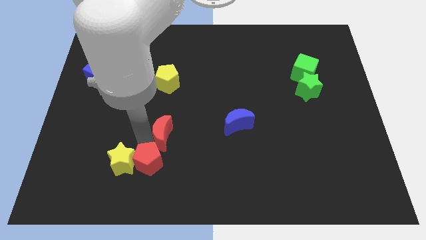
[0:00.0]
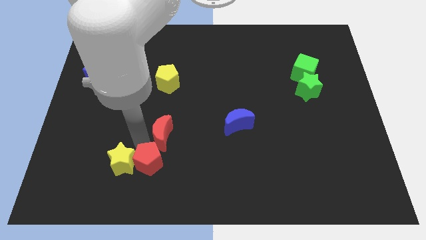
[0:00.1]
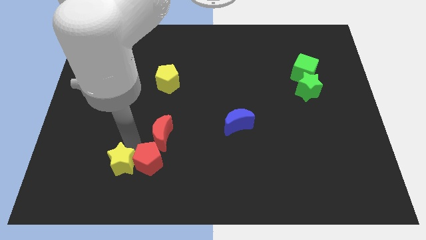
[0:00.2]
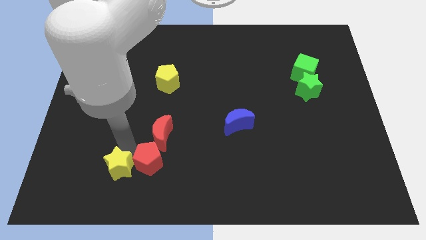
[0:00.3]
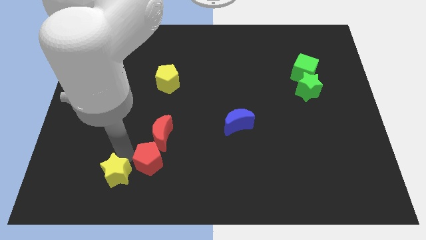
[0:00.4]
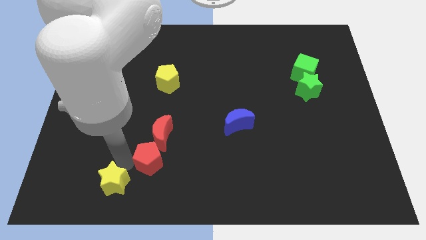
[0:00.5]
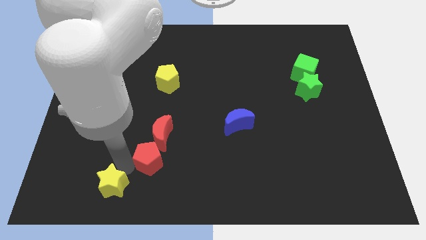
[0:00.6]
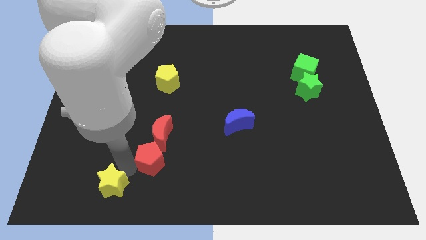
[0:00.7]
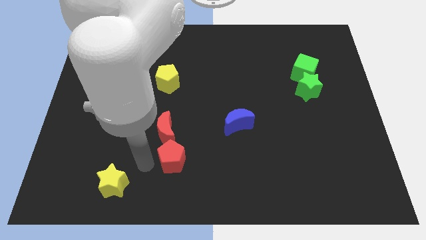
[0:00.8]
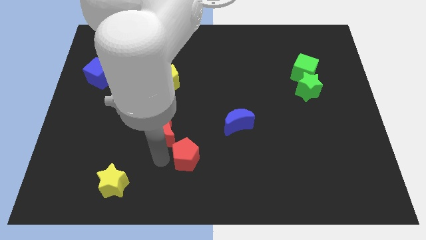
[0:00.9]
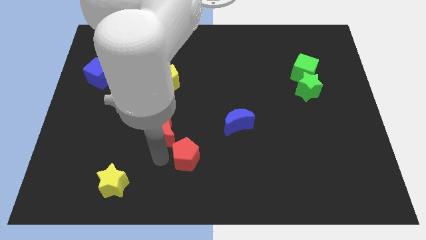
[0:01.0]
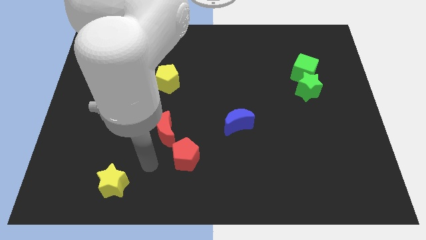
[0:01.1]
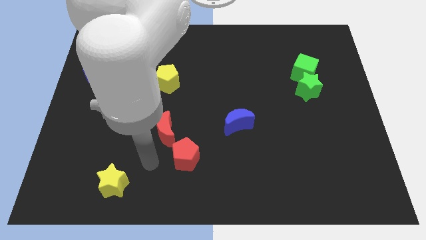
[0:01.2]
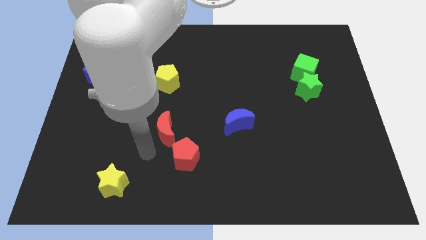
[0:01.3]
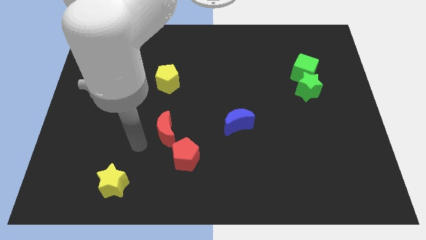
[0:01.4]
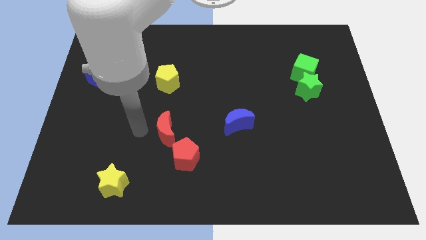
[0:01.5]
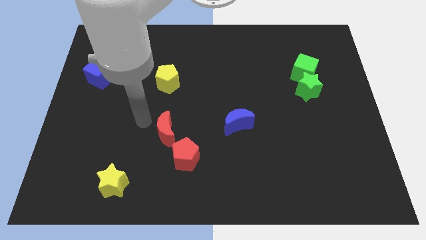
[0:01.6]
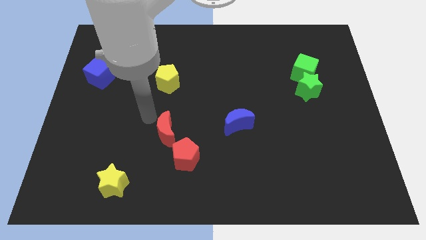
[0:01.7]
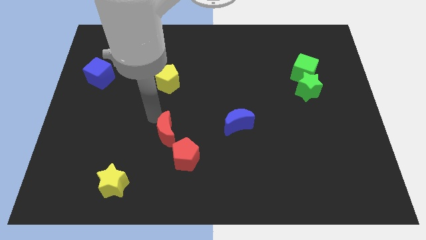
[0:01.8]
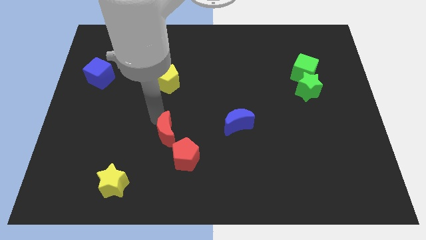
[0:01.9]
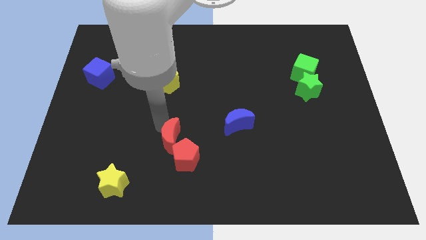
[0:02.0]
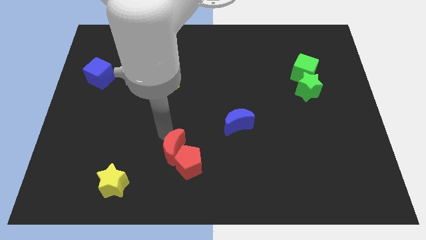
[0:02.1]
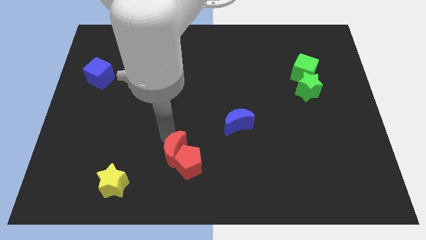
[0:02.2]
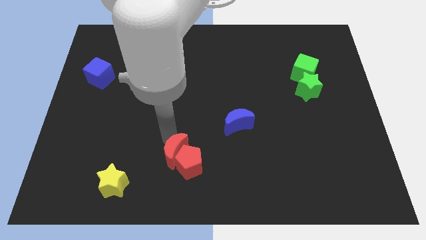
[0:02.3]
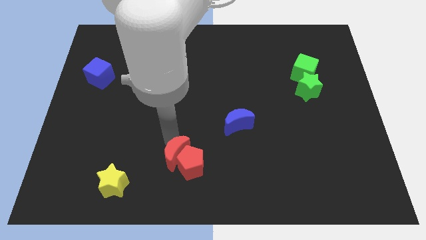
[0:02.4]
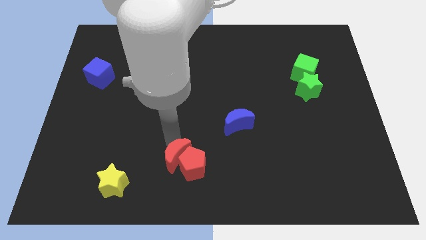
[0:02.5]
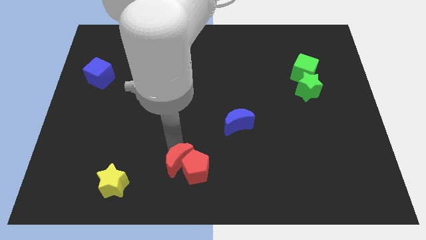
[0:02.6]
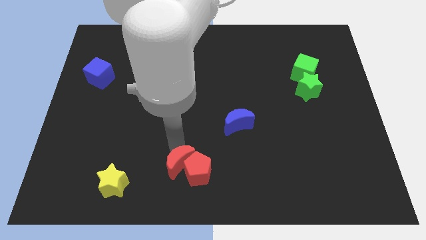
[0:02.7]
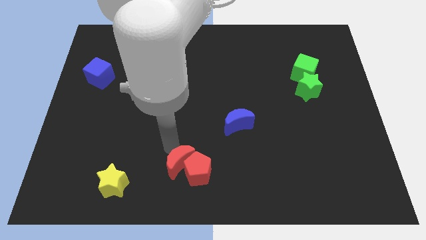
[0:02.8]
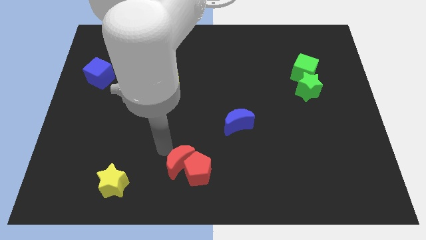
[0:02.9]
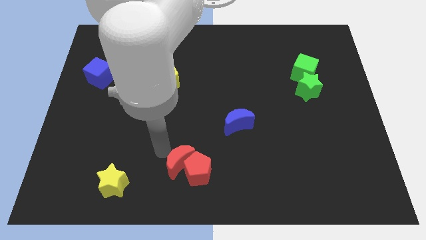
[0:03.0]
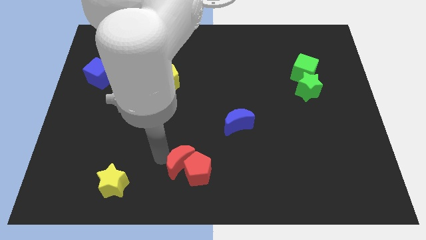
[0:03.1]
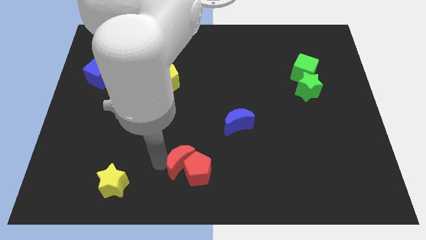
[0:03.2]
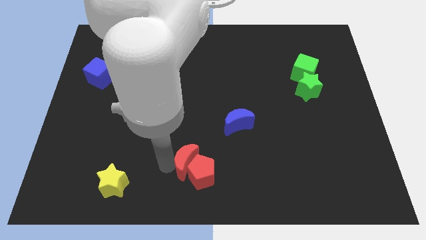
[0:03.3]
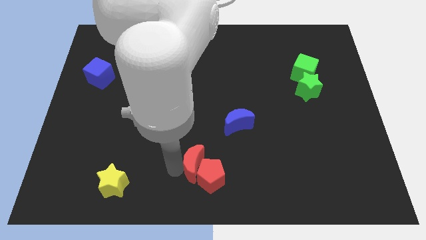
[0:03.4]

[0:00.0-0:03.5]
group up the two red blocks

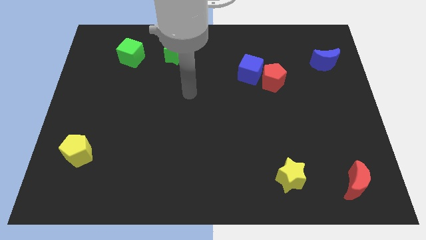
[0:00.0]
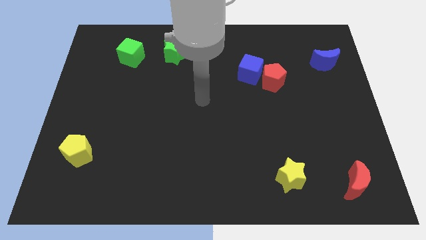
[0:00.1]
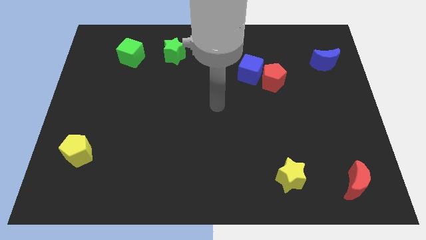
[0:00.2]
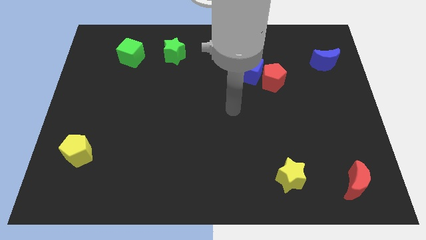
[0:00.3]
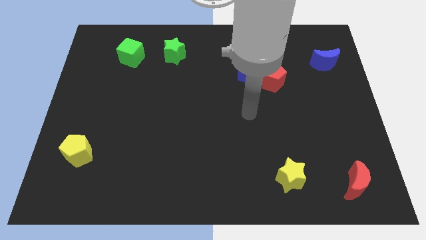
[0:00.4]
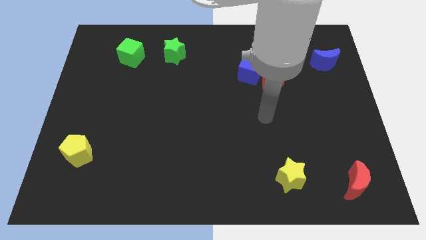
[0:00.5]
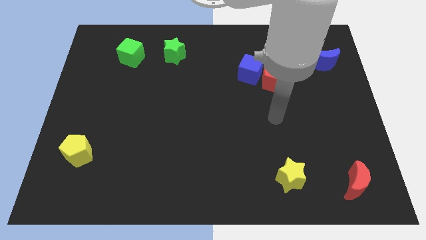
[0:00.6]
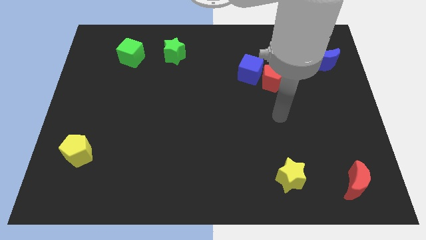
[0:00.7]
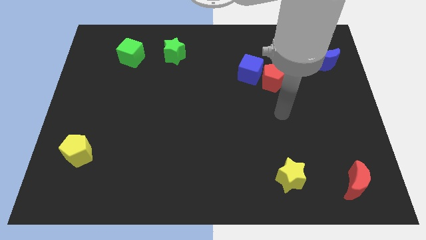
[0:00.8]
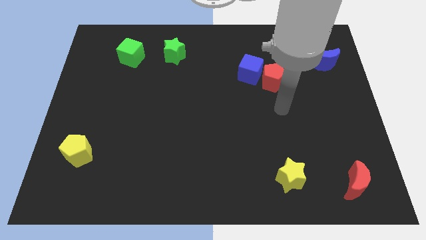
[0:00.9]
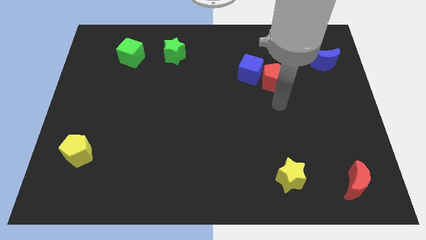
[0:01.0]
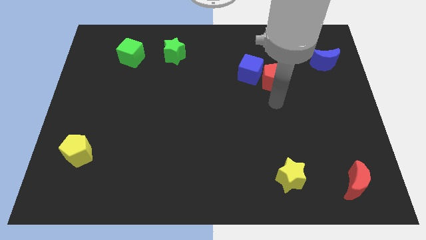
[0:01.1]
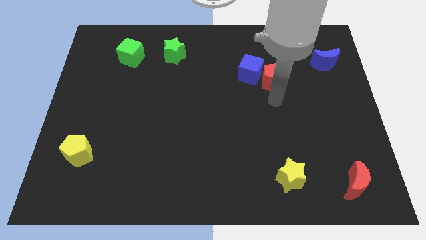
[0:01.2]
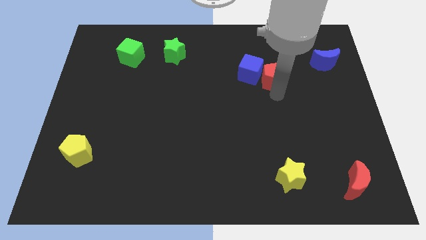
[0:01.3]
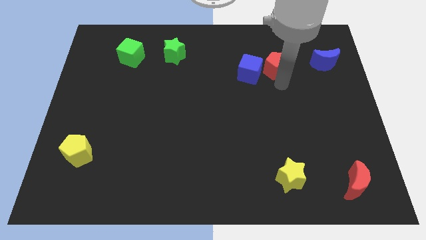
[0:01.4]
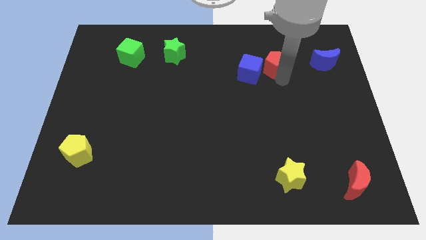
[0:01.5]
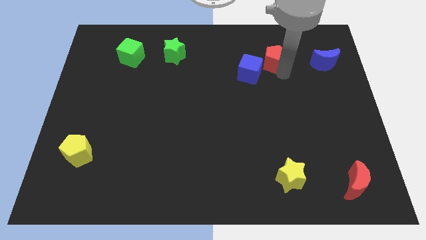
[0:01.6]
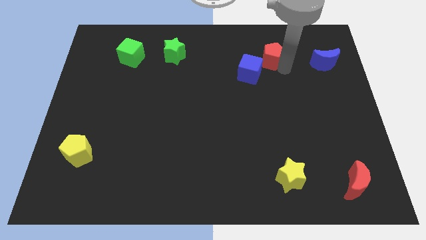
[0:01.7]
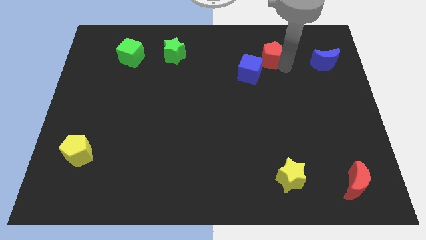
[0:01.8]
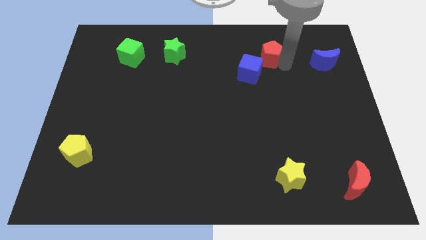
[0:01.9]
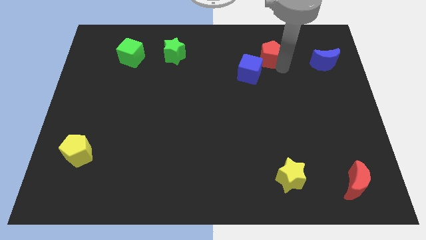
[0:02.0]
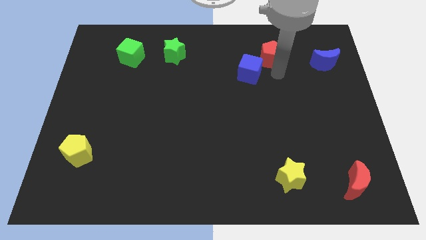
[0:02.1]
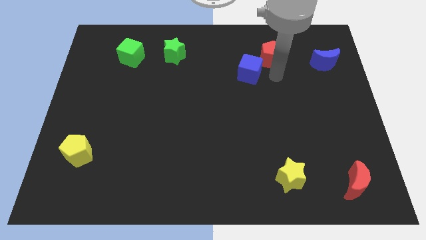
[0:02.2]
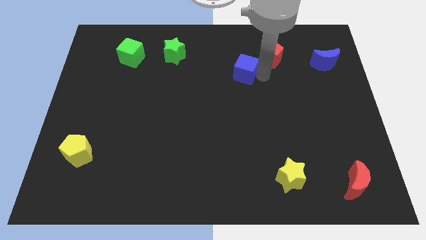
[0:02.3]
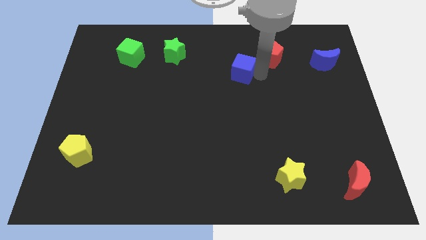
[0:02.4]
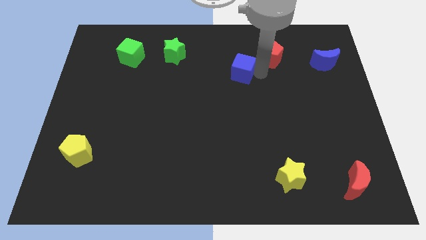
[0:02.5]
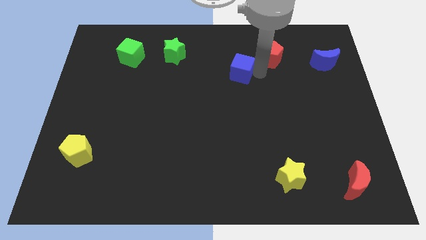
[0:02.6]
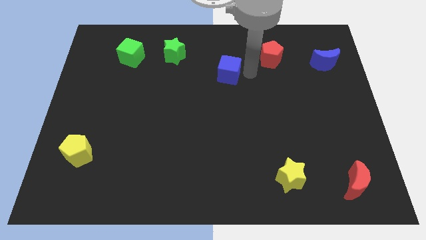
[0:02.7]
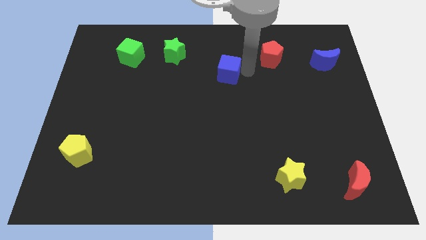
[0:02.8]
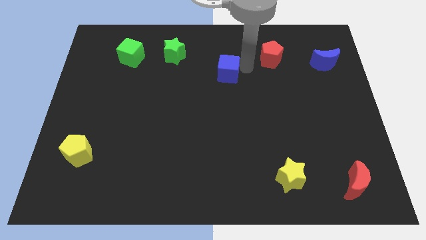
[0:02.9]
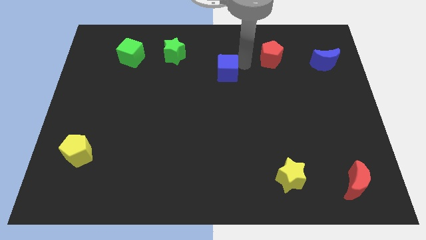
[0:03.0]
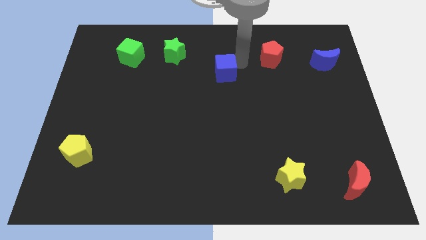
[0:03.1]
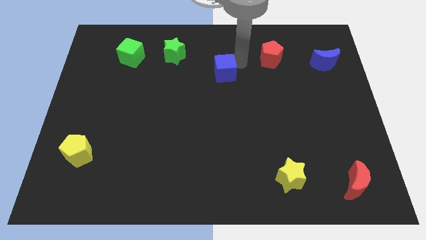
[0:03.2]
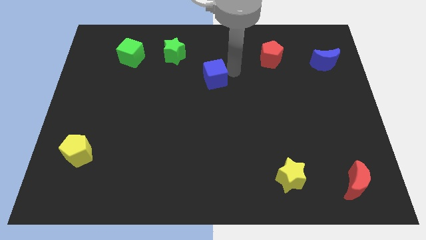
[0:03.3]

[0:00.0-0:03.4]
separate the blue cube and the red pentagon

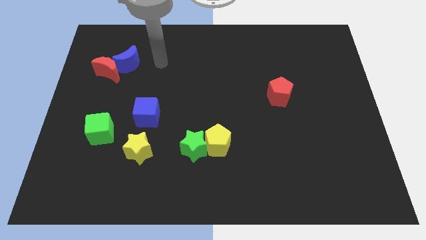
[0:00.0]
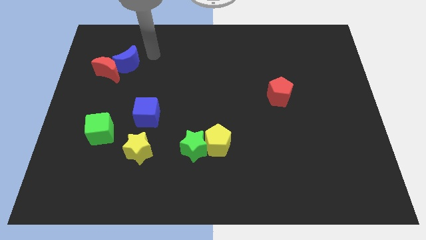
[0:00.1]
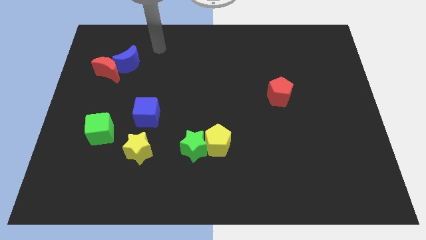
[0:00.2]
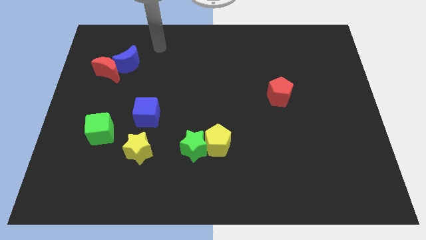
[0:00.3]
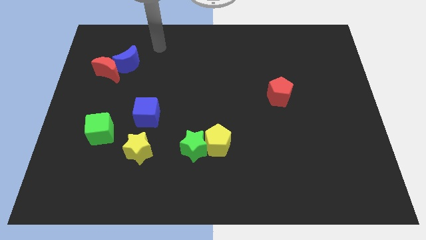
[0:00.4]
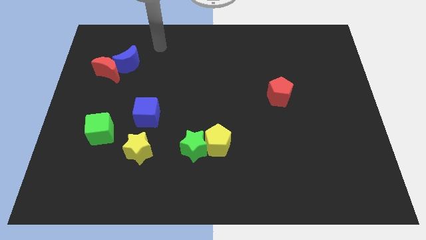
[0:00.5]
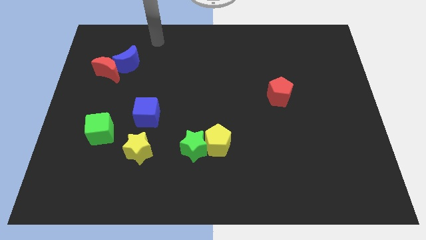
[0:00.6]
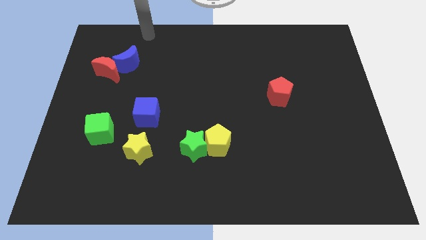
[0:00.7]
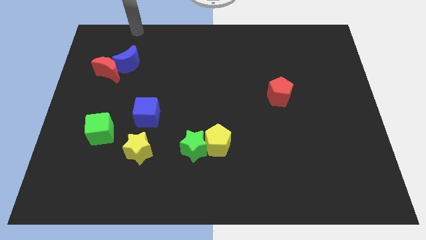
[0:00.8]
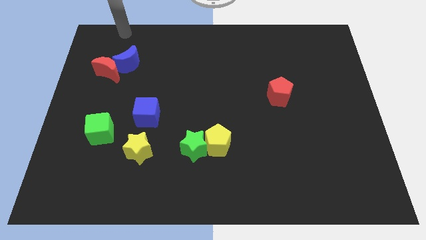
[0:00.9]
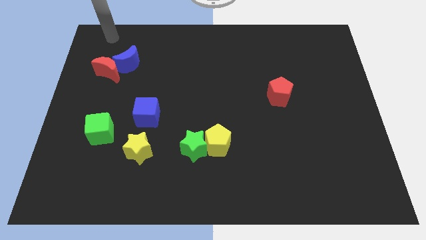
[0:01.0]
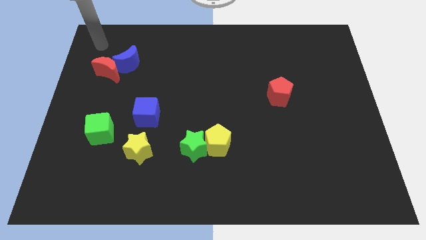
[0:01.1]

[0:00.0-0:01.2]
place your arm at top left corner

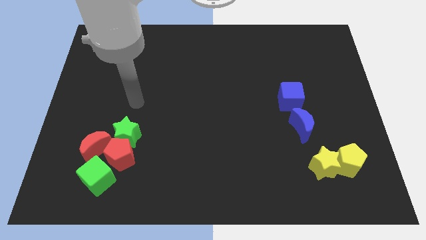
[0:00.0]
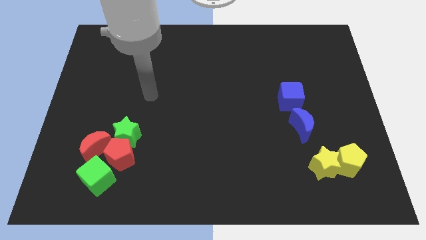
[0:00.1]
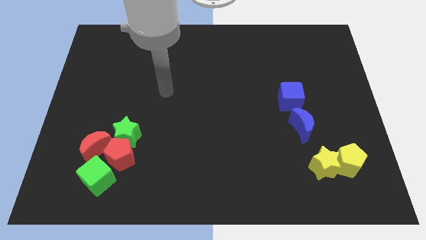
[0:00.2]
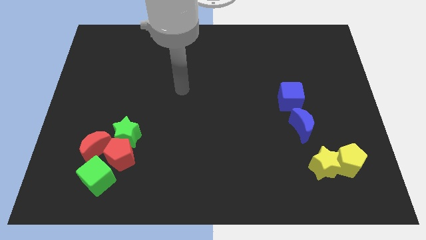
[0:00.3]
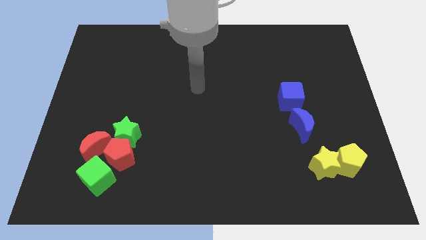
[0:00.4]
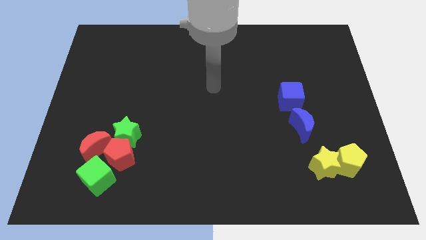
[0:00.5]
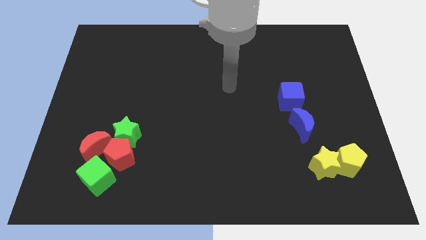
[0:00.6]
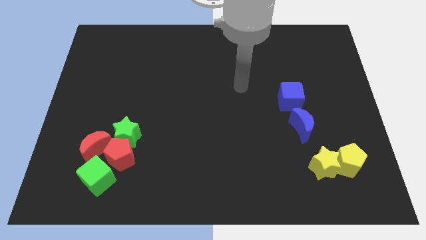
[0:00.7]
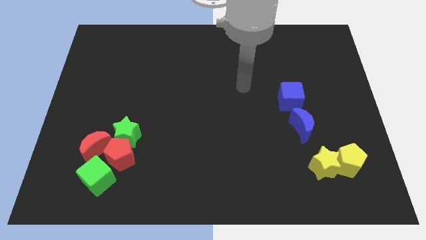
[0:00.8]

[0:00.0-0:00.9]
move the arm away from the green star

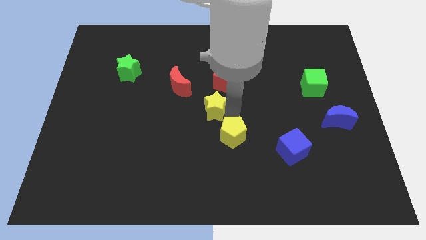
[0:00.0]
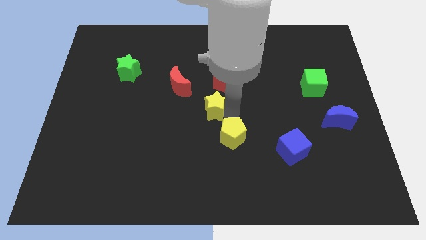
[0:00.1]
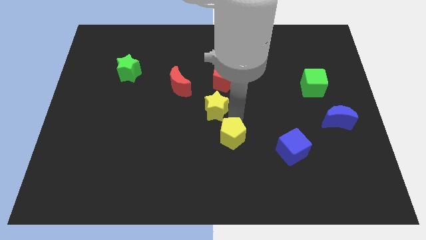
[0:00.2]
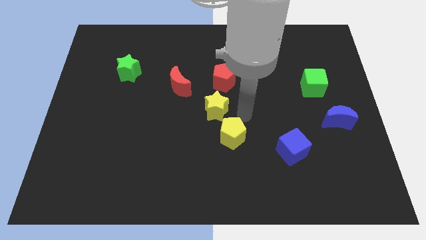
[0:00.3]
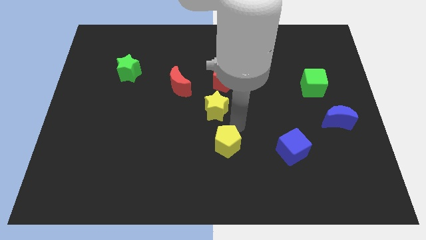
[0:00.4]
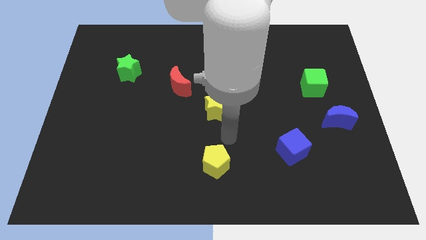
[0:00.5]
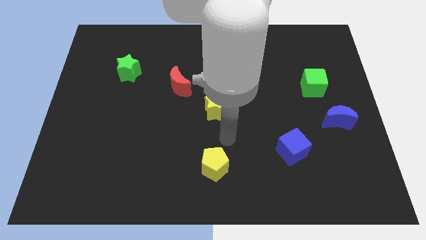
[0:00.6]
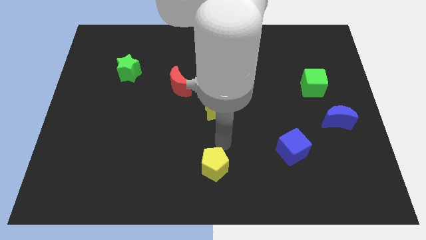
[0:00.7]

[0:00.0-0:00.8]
place the yellow pentagon underneath the yellow star
